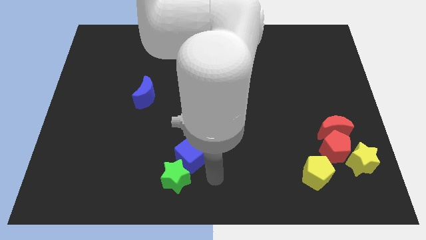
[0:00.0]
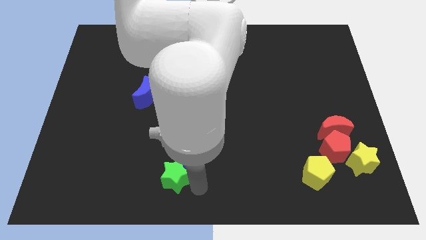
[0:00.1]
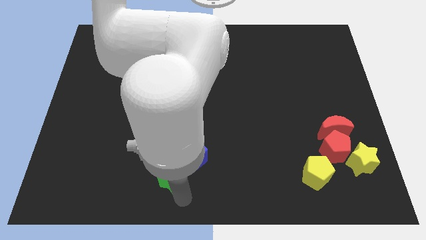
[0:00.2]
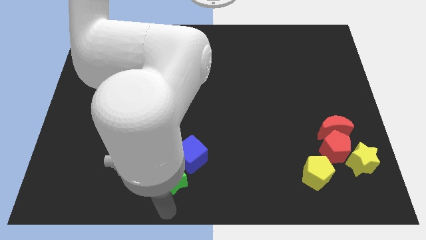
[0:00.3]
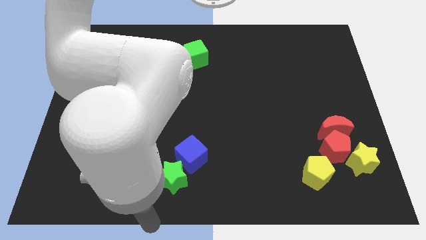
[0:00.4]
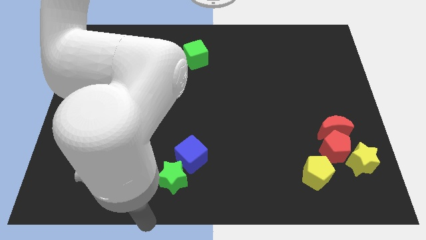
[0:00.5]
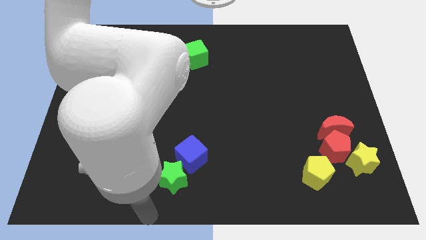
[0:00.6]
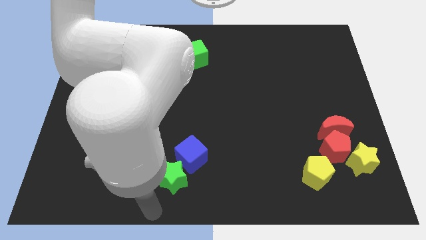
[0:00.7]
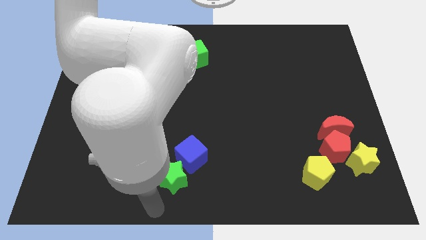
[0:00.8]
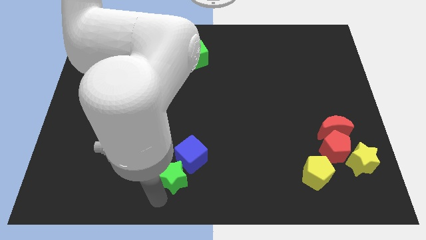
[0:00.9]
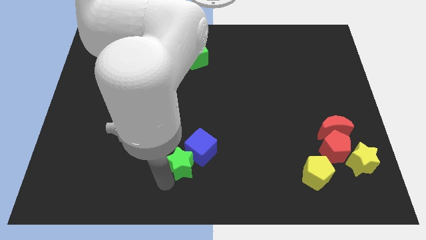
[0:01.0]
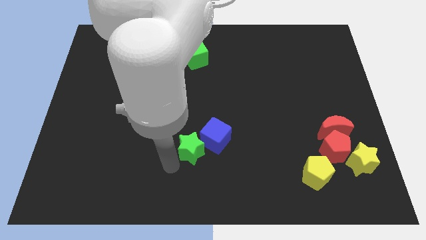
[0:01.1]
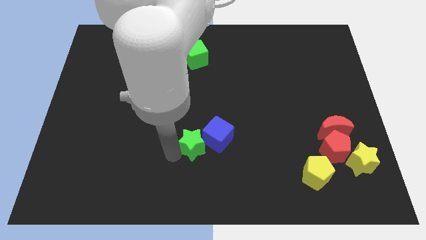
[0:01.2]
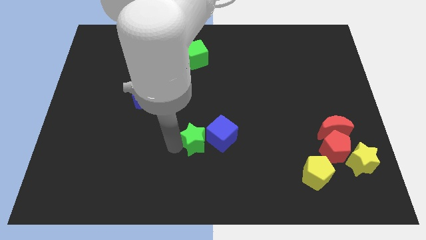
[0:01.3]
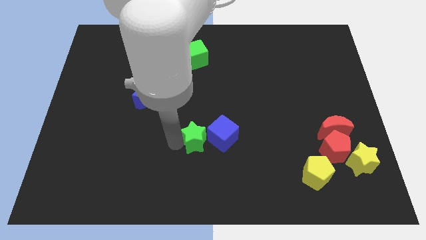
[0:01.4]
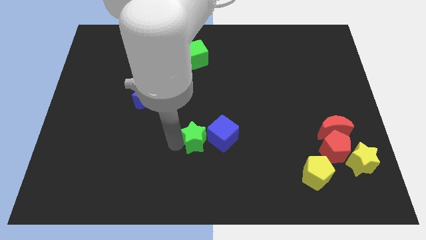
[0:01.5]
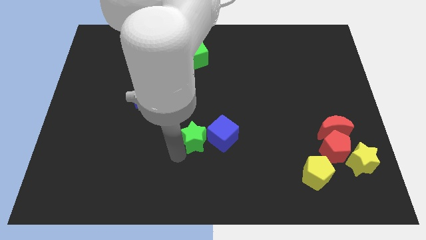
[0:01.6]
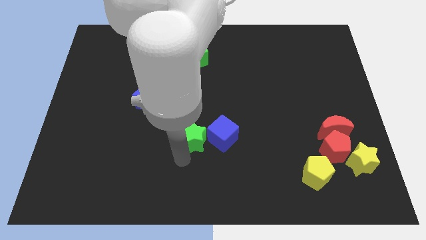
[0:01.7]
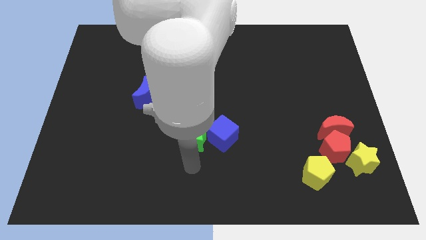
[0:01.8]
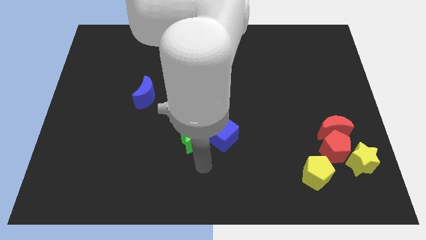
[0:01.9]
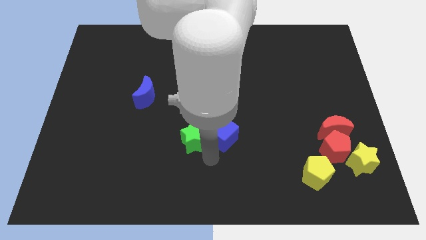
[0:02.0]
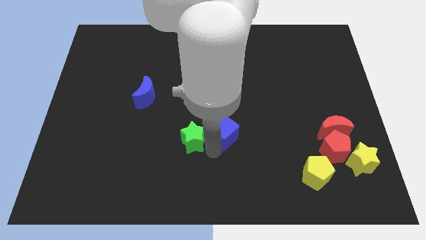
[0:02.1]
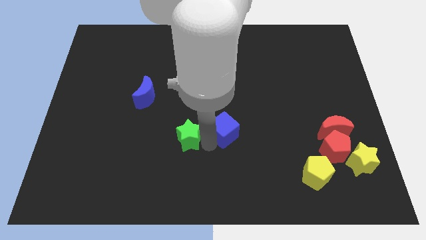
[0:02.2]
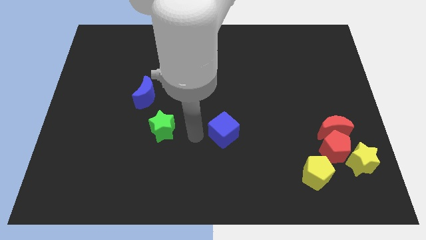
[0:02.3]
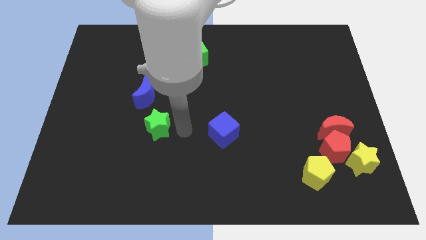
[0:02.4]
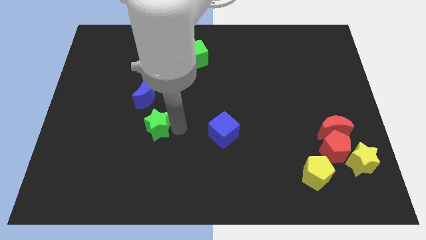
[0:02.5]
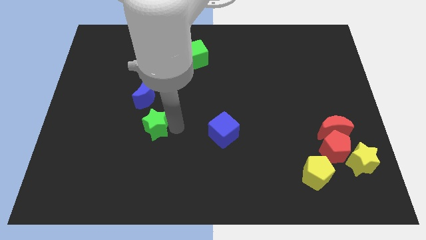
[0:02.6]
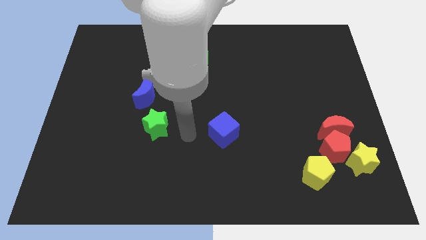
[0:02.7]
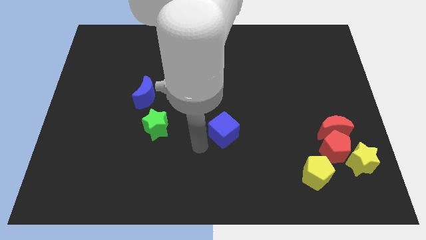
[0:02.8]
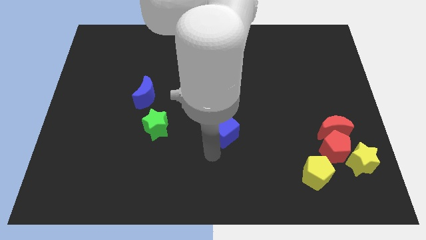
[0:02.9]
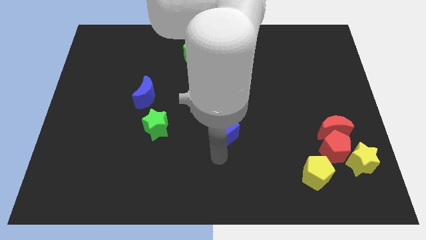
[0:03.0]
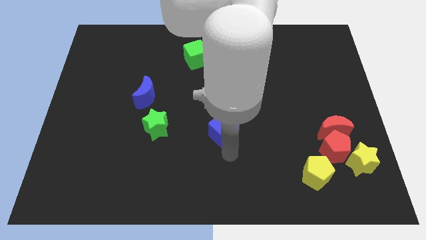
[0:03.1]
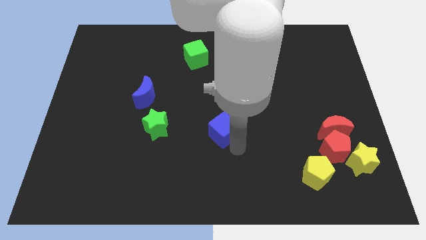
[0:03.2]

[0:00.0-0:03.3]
move the green star to the bottom of the blue crescent

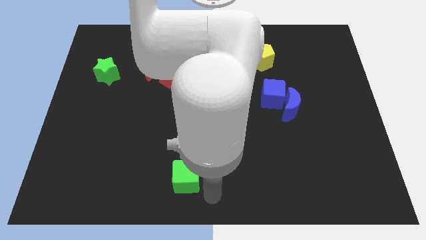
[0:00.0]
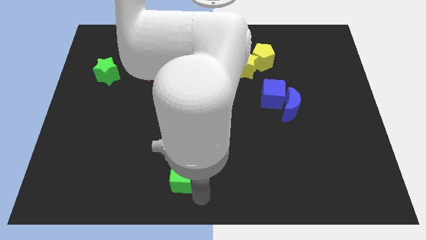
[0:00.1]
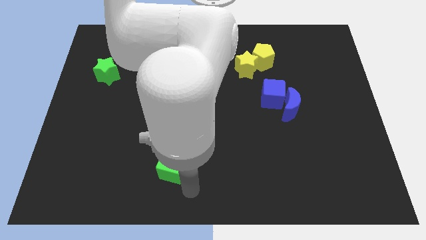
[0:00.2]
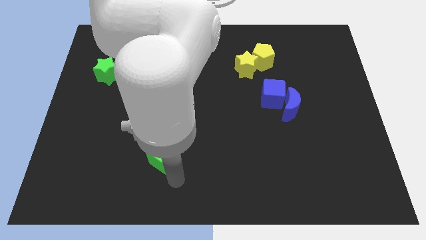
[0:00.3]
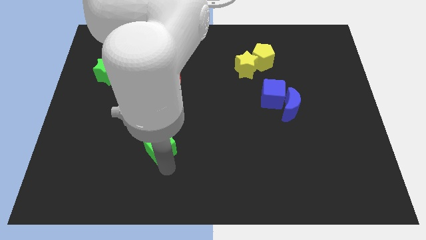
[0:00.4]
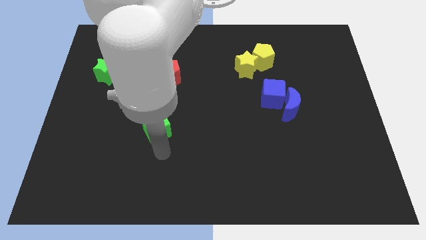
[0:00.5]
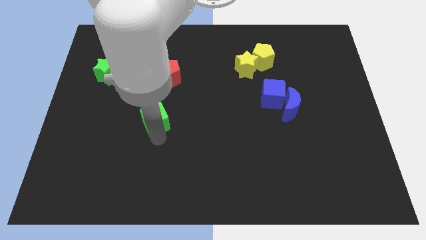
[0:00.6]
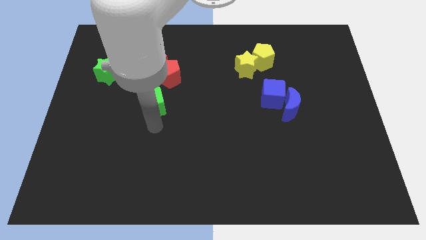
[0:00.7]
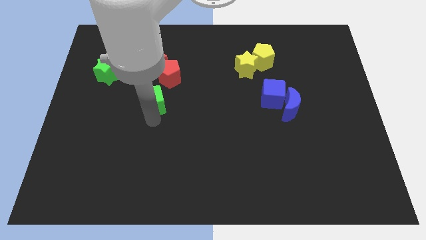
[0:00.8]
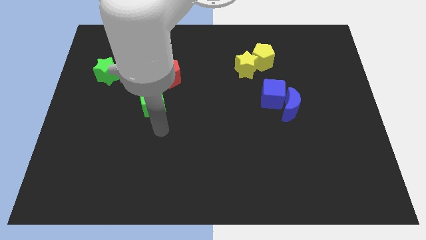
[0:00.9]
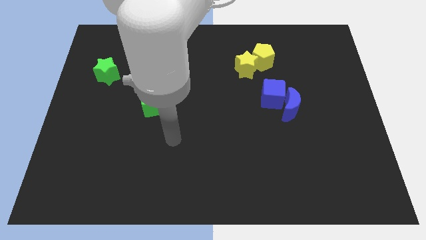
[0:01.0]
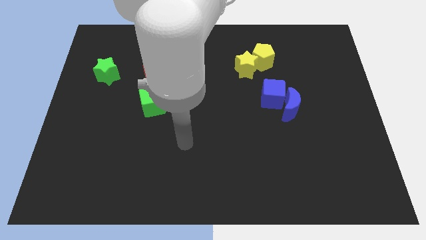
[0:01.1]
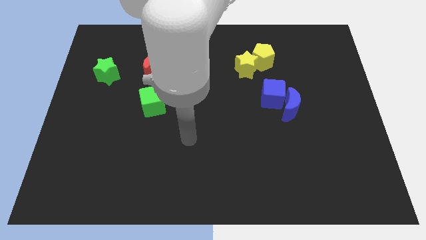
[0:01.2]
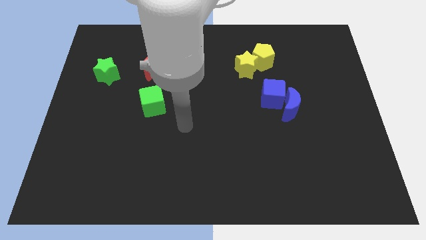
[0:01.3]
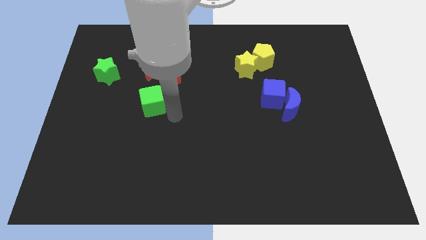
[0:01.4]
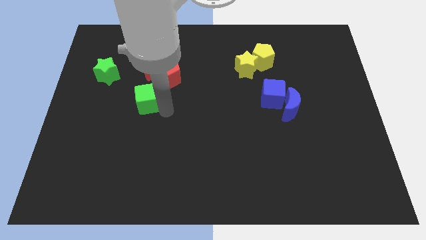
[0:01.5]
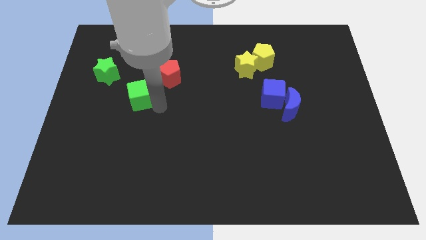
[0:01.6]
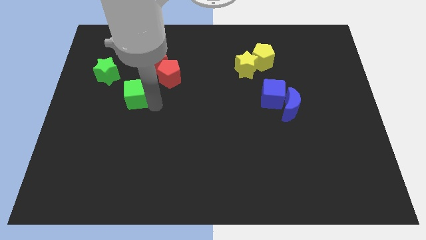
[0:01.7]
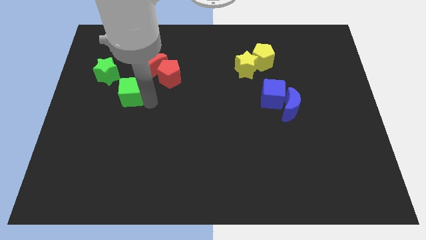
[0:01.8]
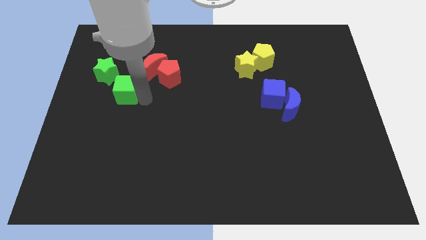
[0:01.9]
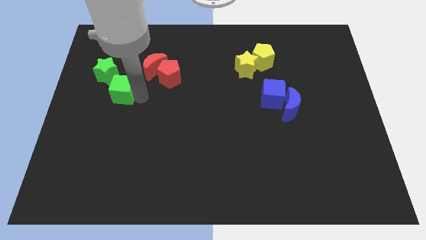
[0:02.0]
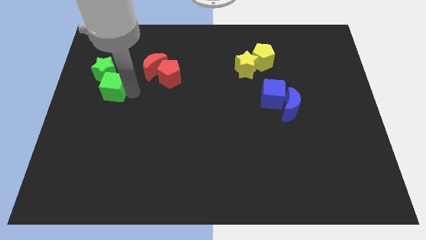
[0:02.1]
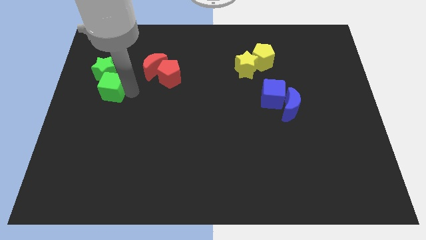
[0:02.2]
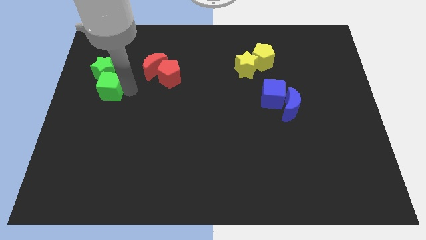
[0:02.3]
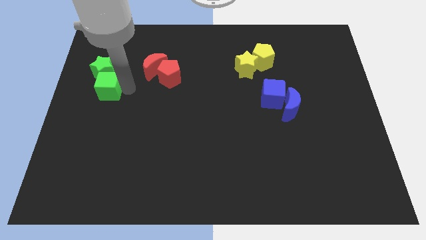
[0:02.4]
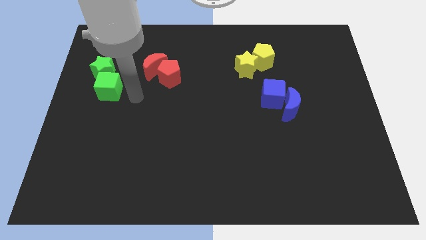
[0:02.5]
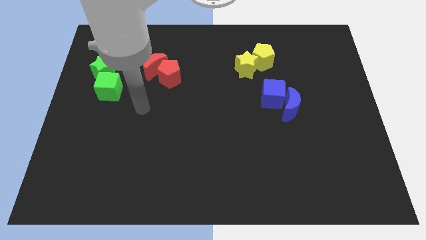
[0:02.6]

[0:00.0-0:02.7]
push the green cube into the green star

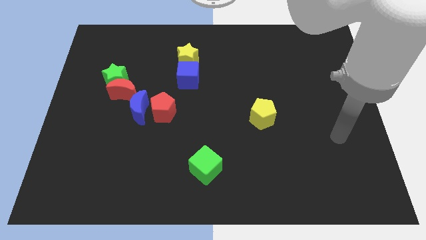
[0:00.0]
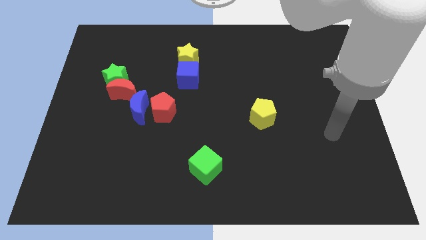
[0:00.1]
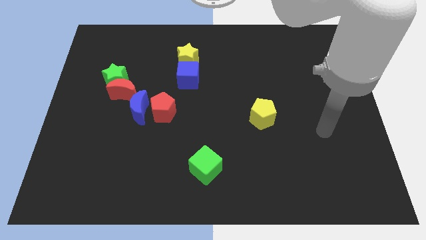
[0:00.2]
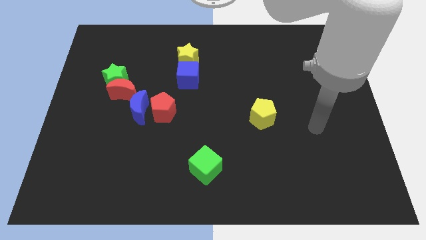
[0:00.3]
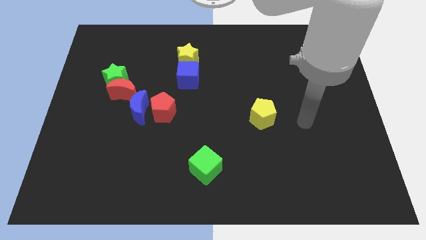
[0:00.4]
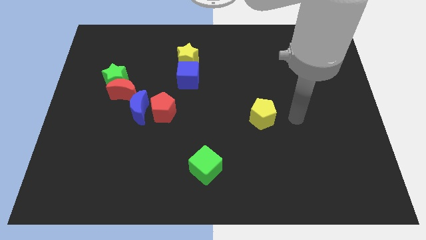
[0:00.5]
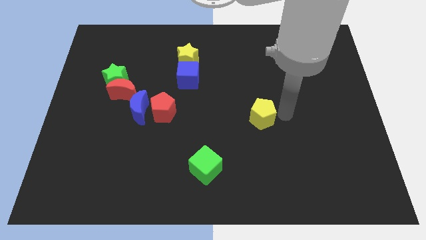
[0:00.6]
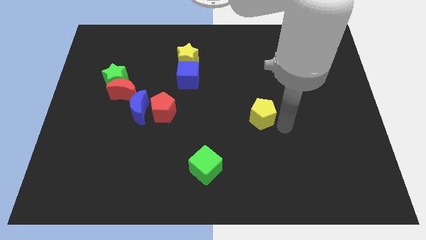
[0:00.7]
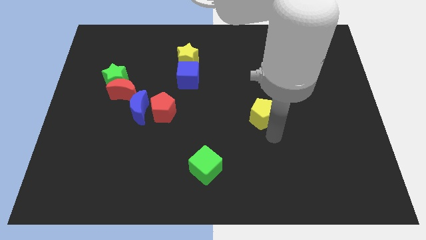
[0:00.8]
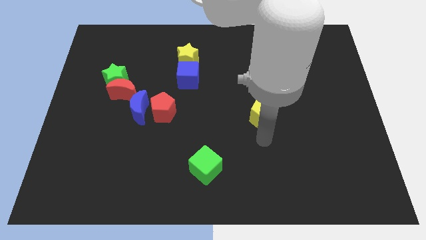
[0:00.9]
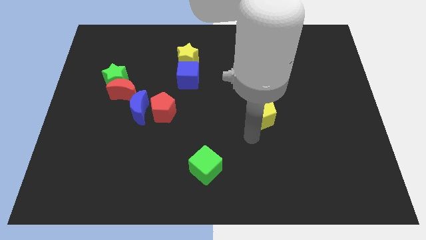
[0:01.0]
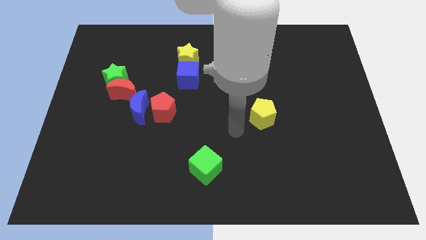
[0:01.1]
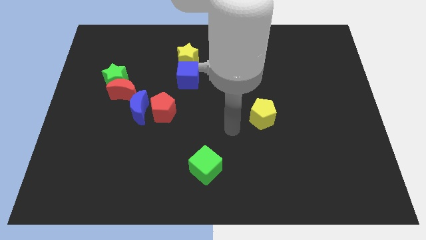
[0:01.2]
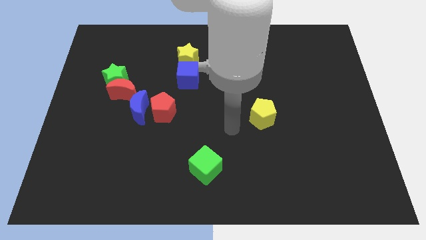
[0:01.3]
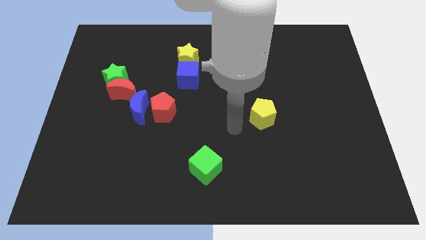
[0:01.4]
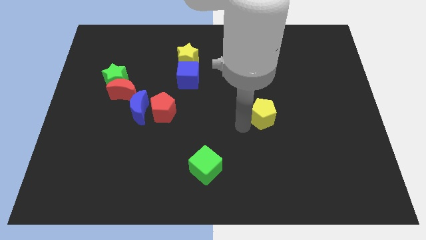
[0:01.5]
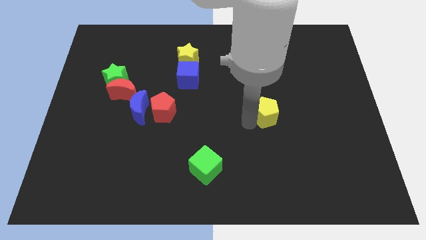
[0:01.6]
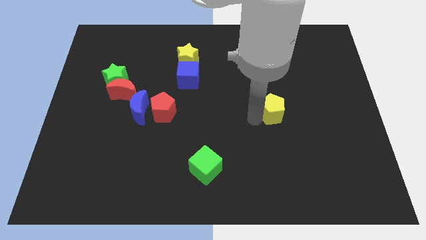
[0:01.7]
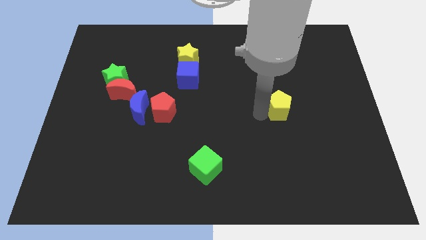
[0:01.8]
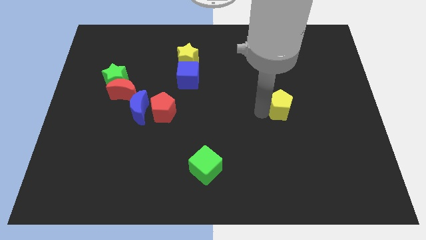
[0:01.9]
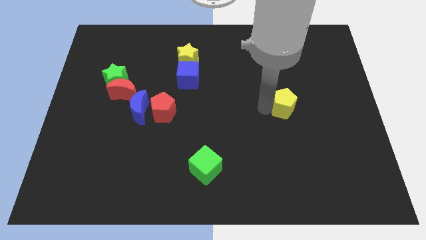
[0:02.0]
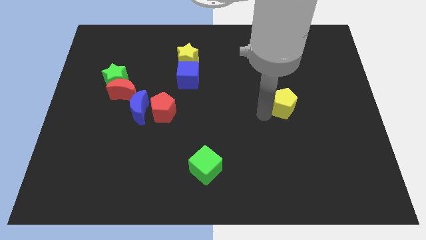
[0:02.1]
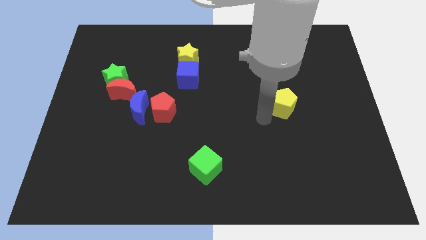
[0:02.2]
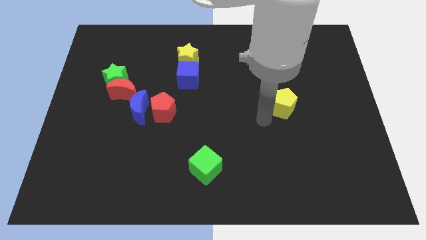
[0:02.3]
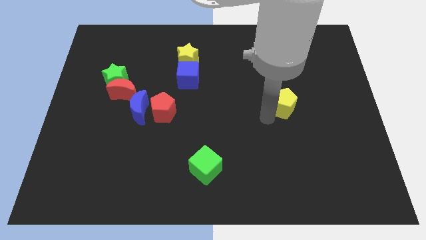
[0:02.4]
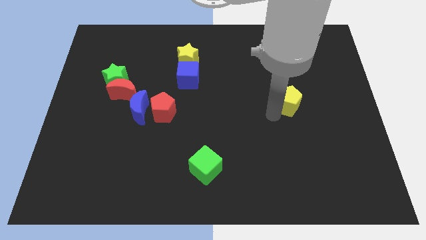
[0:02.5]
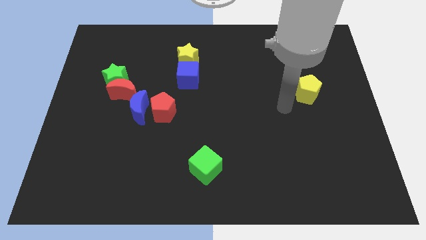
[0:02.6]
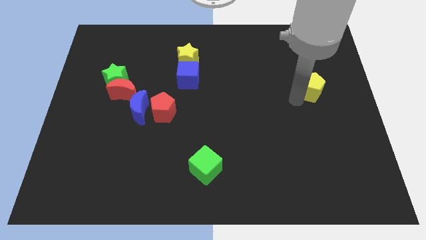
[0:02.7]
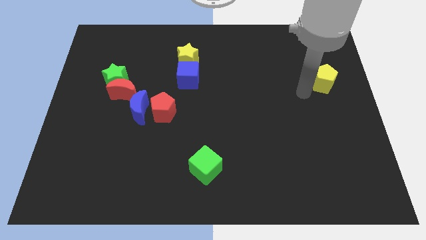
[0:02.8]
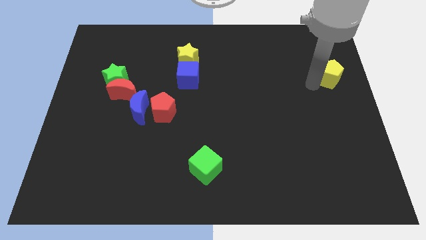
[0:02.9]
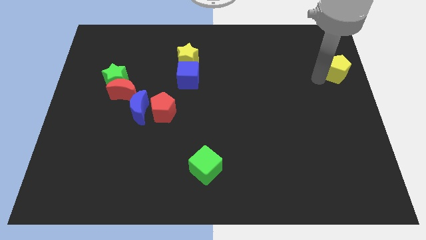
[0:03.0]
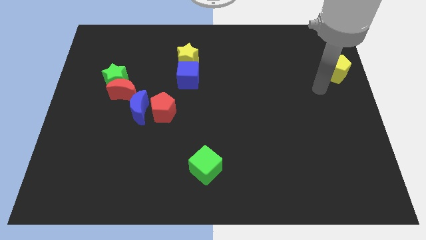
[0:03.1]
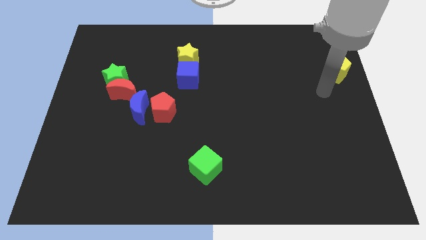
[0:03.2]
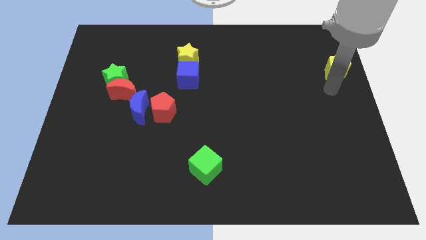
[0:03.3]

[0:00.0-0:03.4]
move the yellow pentagon diagonally to the top right of the board
